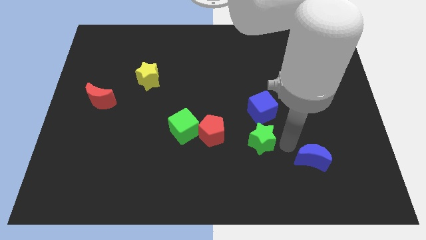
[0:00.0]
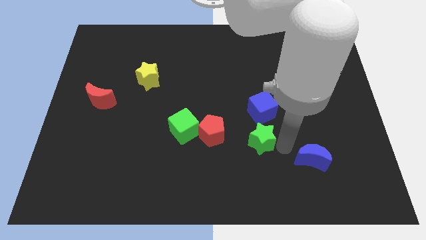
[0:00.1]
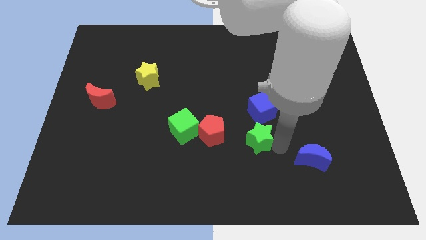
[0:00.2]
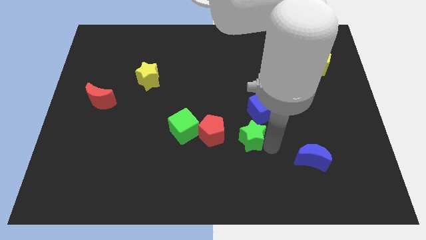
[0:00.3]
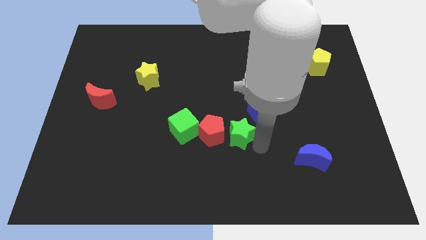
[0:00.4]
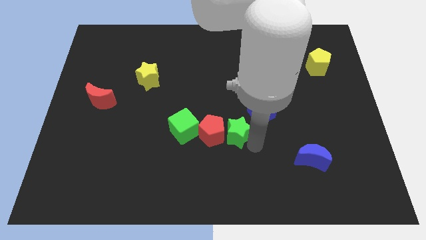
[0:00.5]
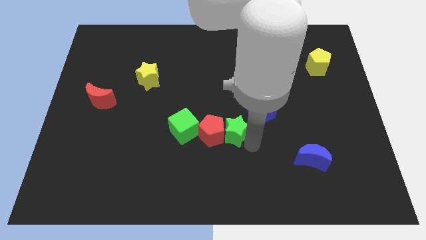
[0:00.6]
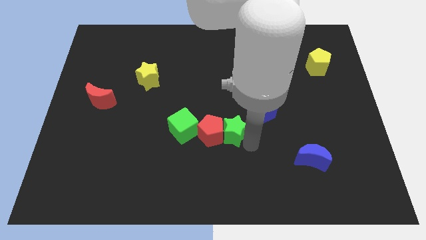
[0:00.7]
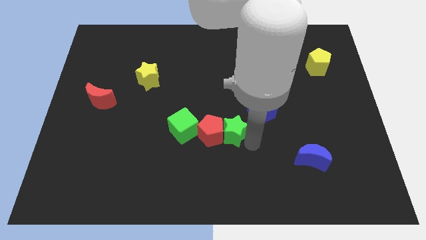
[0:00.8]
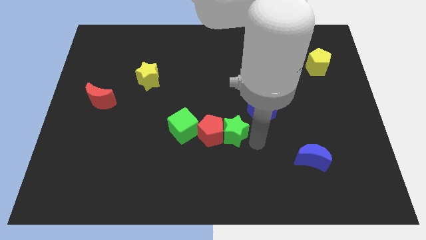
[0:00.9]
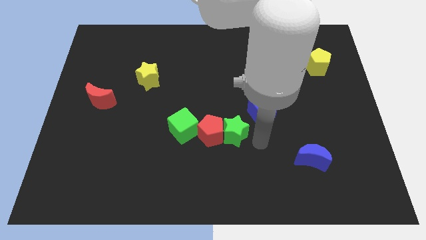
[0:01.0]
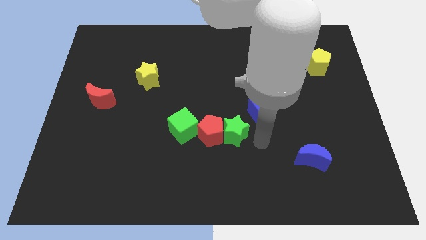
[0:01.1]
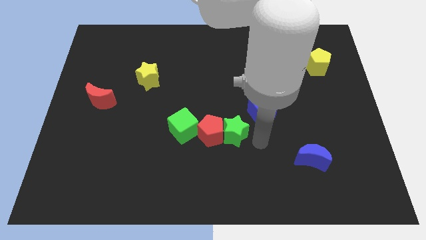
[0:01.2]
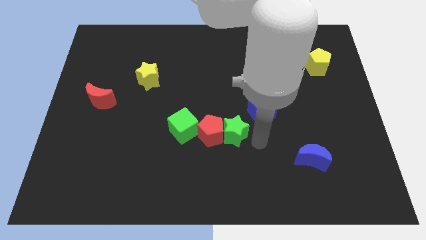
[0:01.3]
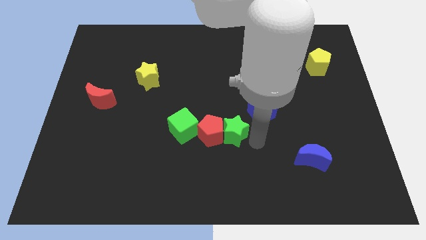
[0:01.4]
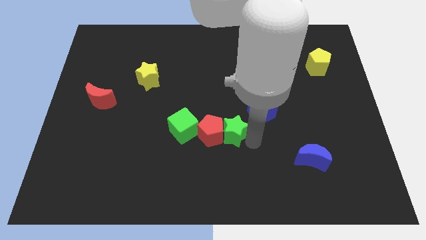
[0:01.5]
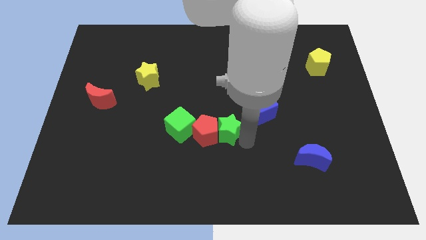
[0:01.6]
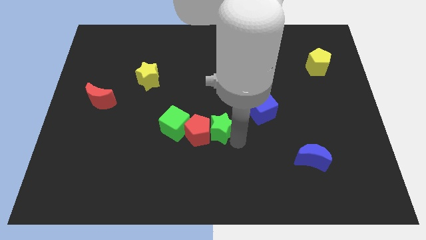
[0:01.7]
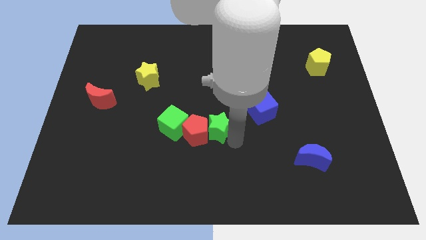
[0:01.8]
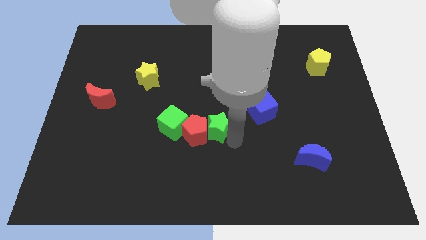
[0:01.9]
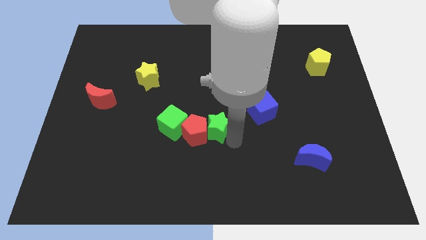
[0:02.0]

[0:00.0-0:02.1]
move the green star to the right of red pentagon

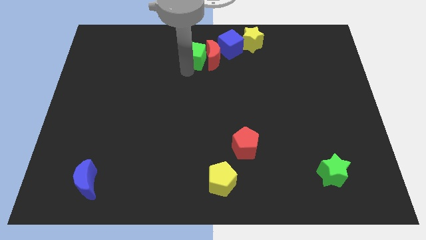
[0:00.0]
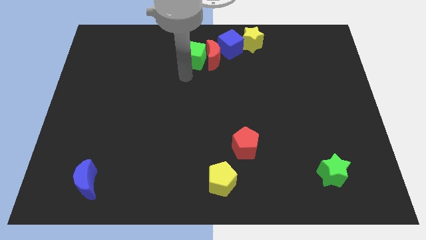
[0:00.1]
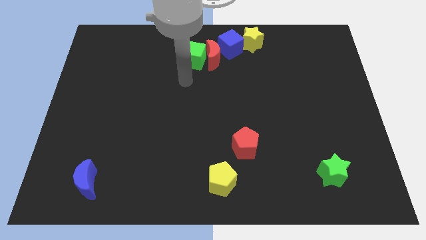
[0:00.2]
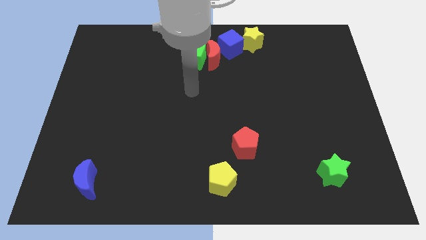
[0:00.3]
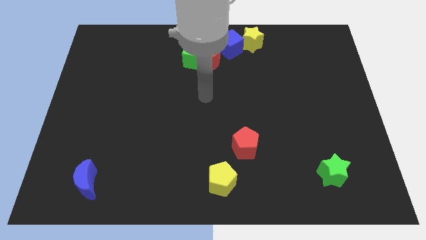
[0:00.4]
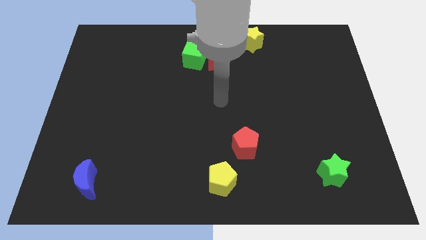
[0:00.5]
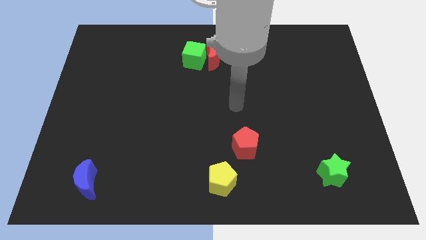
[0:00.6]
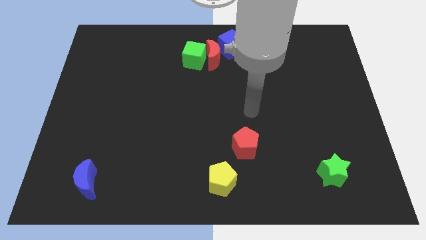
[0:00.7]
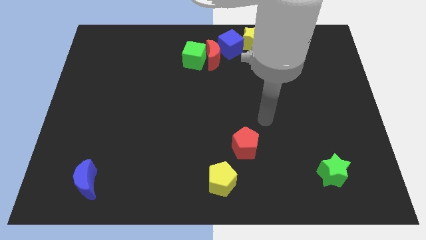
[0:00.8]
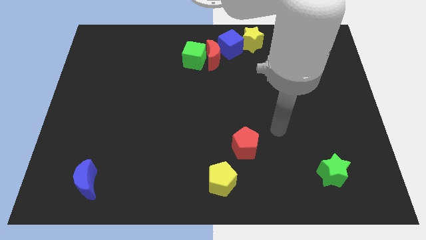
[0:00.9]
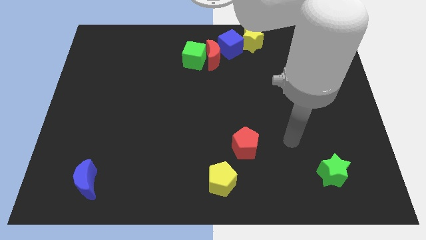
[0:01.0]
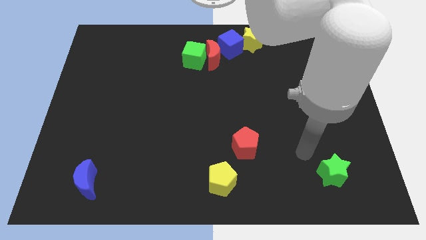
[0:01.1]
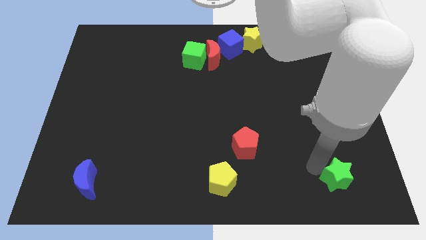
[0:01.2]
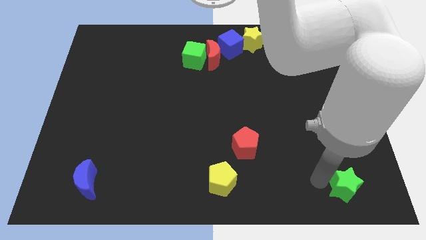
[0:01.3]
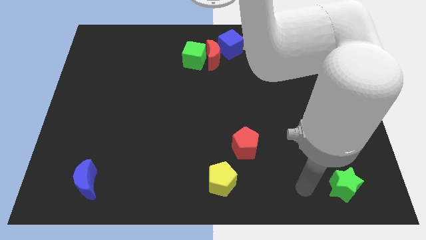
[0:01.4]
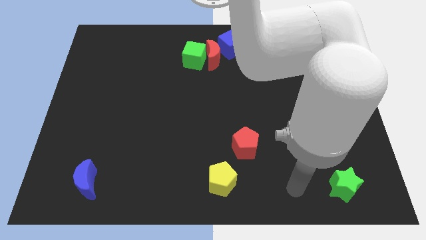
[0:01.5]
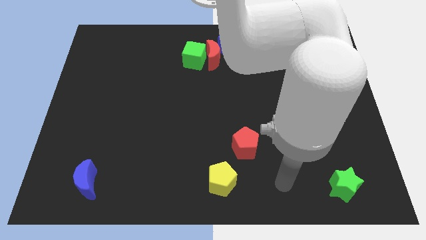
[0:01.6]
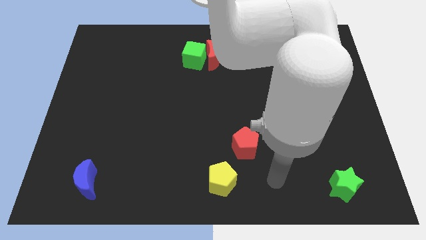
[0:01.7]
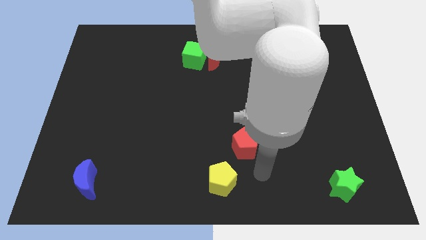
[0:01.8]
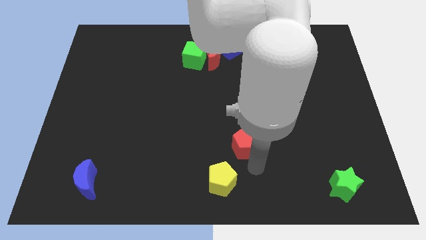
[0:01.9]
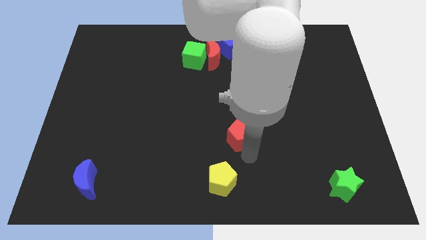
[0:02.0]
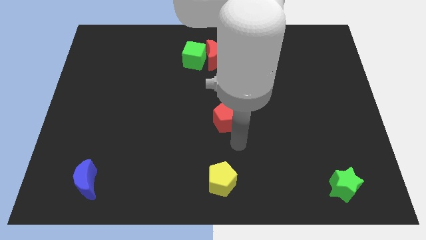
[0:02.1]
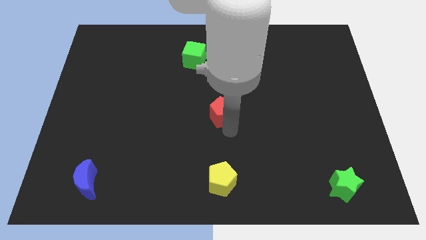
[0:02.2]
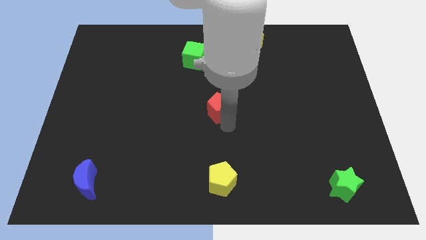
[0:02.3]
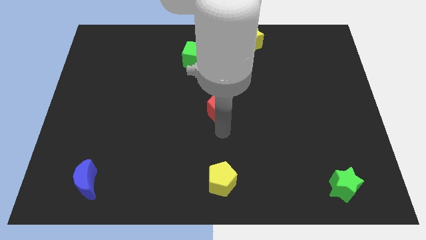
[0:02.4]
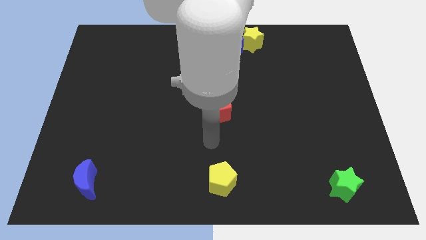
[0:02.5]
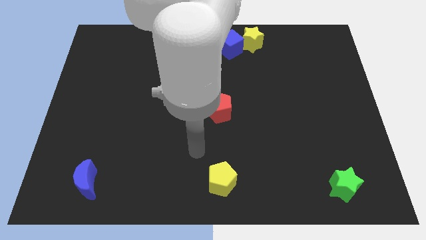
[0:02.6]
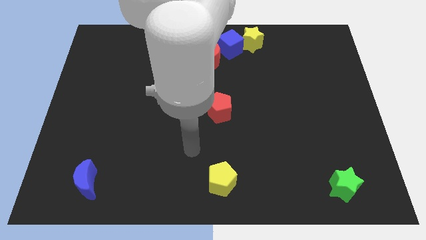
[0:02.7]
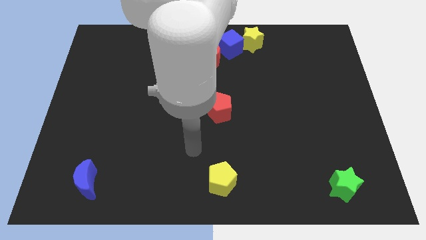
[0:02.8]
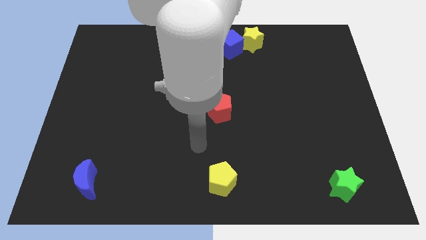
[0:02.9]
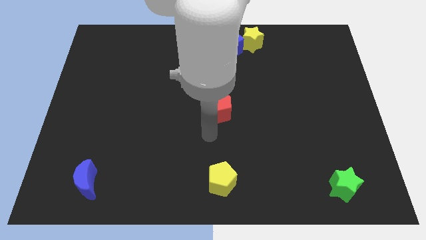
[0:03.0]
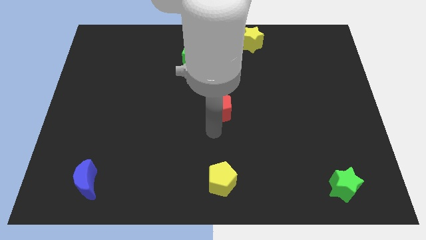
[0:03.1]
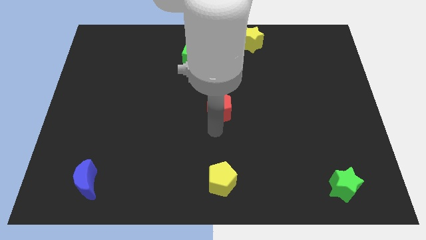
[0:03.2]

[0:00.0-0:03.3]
place the red pentagon diagonally above the top left side of he green star

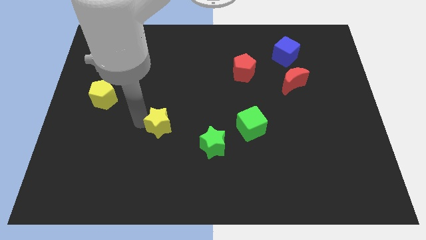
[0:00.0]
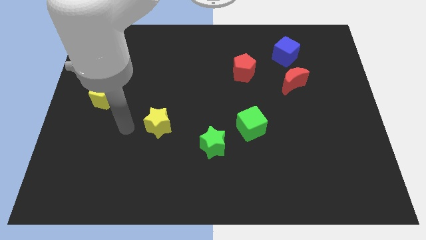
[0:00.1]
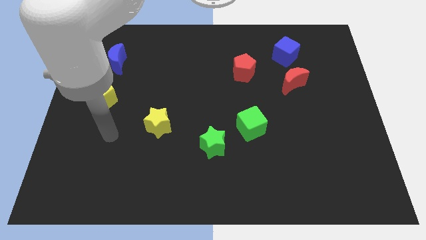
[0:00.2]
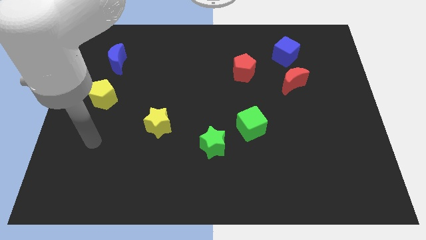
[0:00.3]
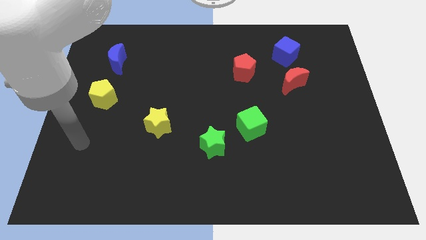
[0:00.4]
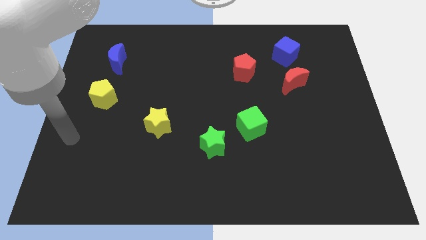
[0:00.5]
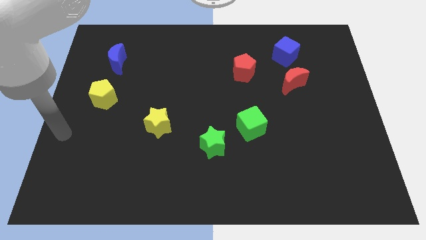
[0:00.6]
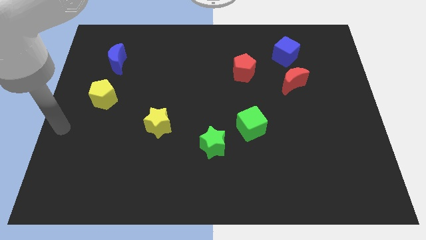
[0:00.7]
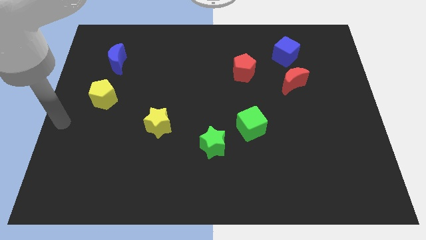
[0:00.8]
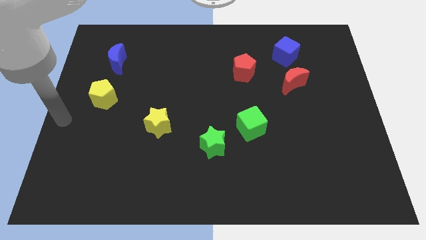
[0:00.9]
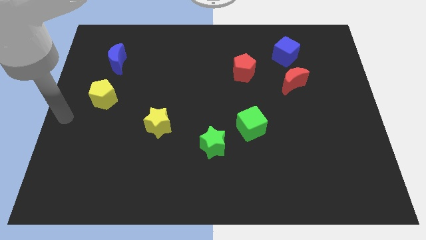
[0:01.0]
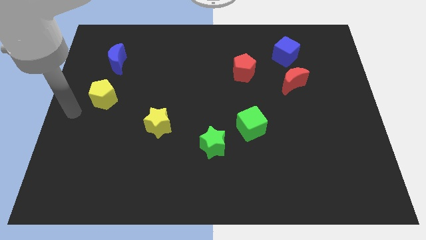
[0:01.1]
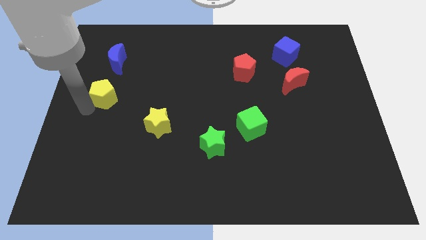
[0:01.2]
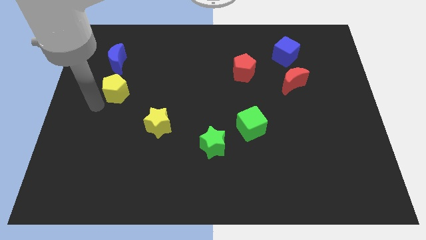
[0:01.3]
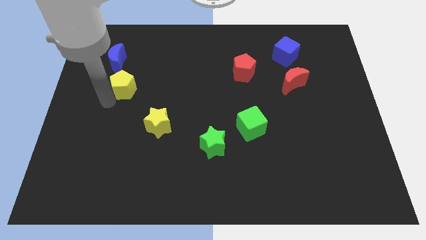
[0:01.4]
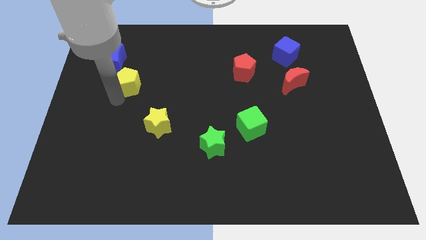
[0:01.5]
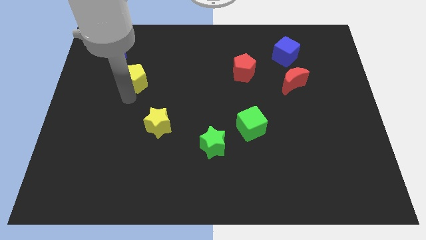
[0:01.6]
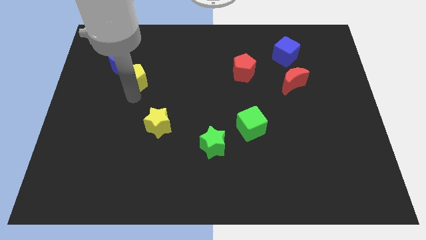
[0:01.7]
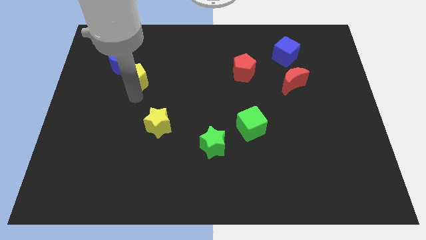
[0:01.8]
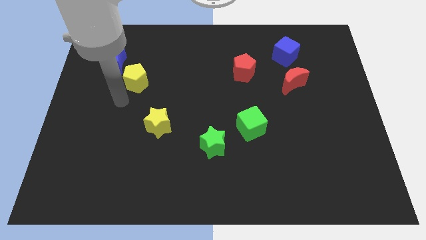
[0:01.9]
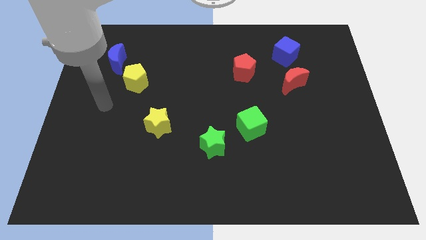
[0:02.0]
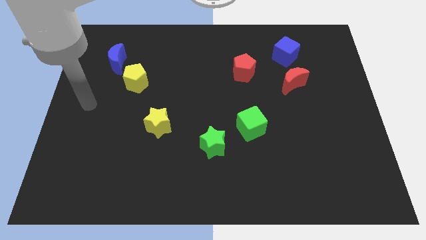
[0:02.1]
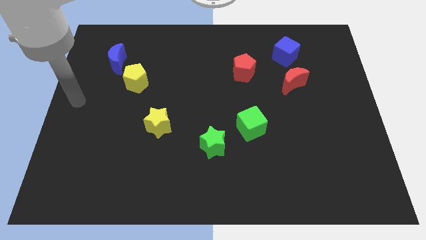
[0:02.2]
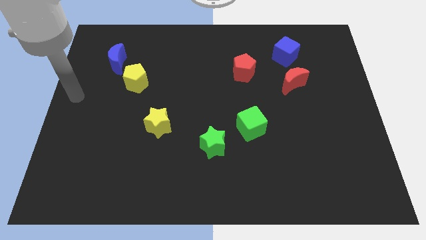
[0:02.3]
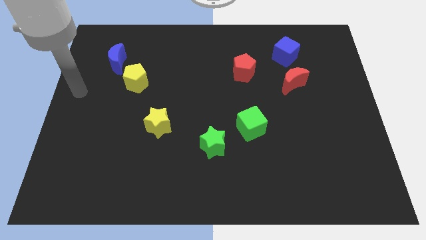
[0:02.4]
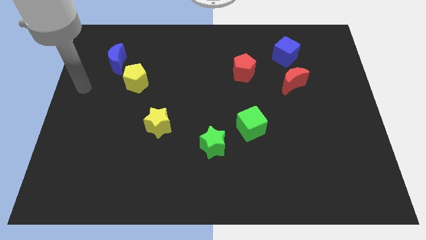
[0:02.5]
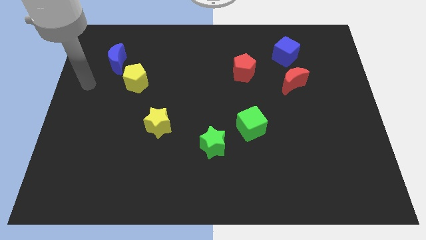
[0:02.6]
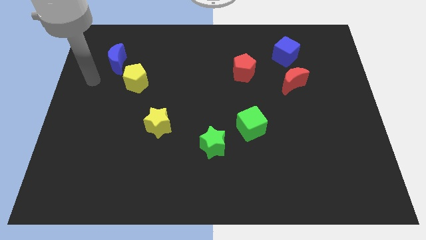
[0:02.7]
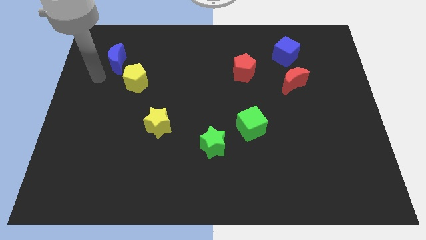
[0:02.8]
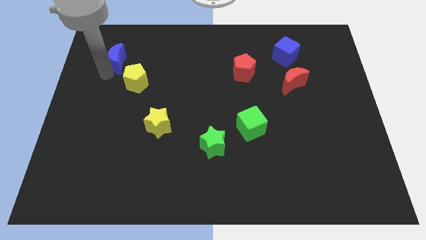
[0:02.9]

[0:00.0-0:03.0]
place the yellow pentagon in between the blue moon and yellow star

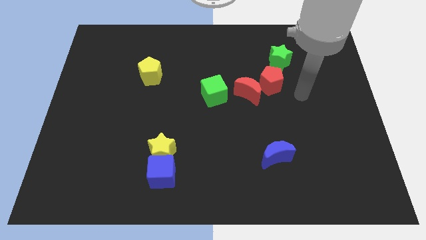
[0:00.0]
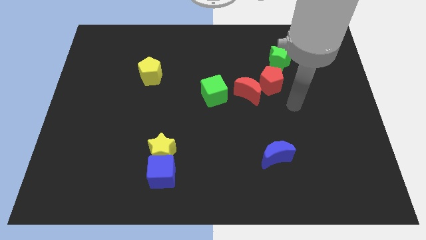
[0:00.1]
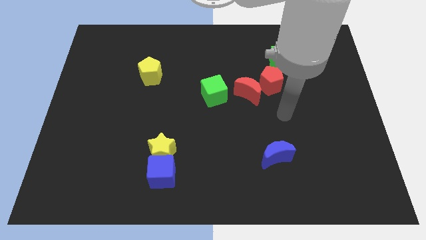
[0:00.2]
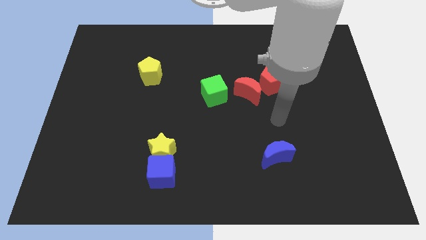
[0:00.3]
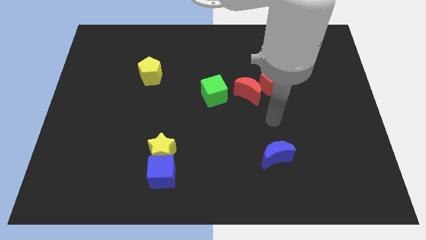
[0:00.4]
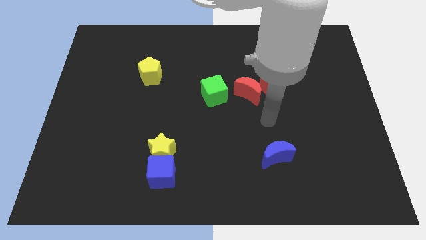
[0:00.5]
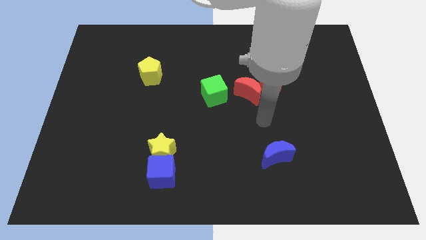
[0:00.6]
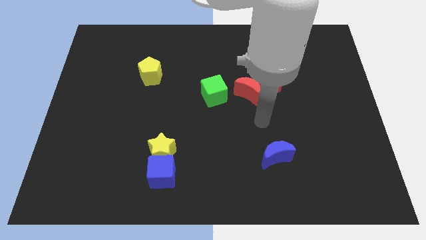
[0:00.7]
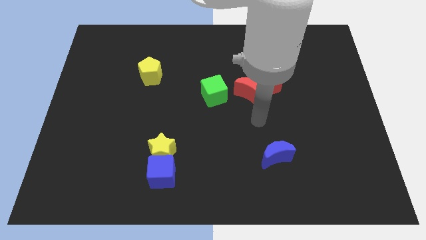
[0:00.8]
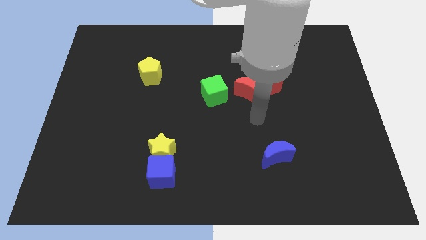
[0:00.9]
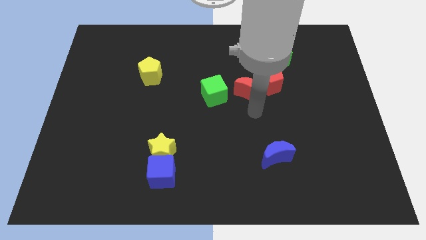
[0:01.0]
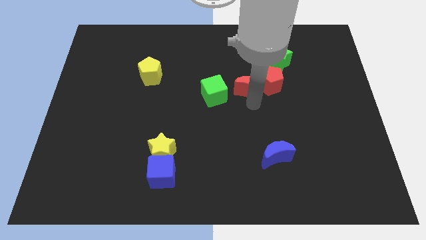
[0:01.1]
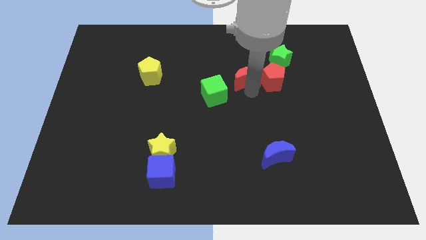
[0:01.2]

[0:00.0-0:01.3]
touch the red moon
